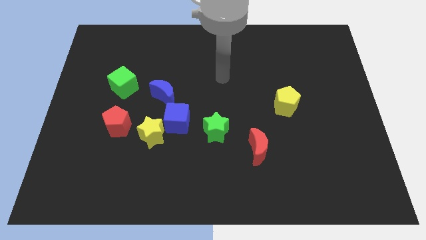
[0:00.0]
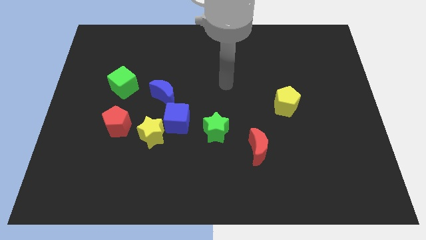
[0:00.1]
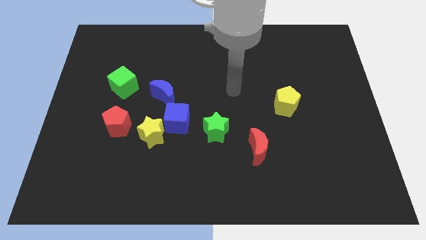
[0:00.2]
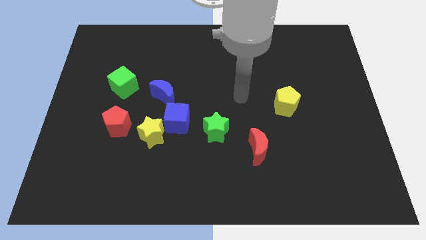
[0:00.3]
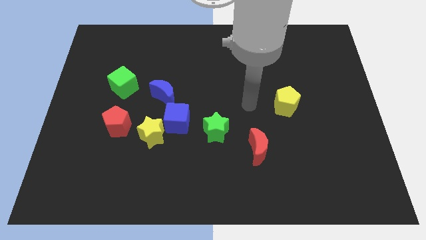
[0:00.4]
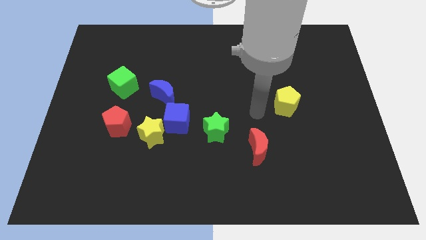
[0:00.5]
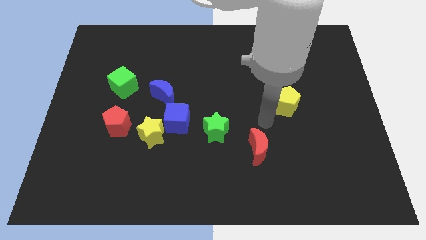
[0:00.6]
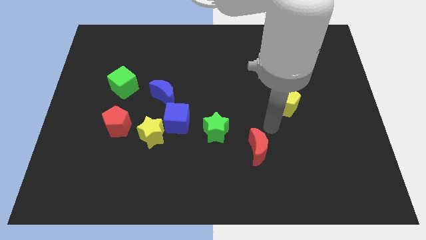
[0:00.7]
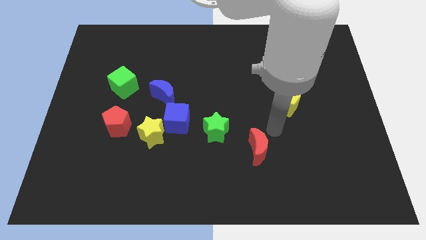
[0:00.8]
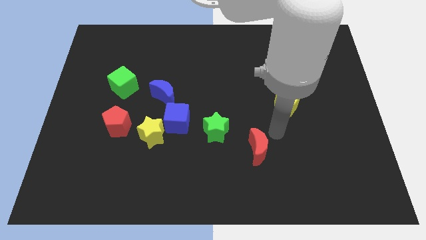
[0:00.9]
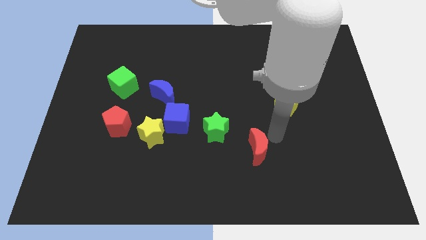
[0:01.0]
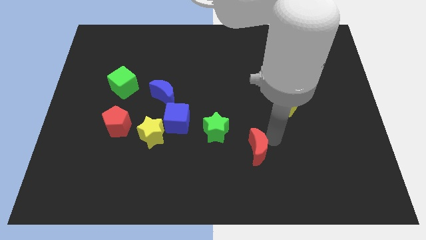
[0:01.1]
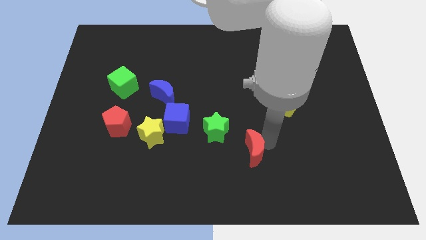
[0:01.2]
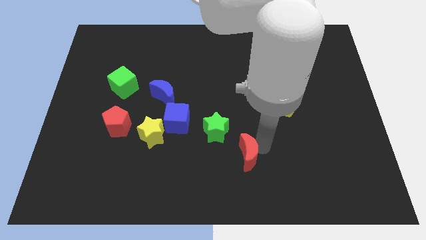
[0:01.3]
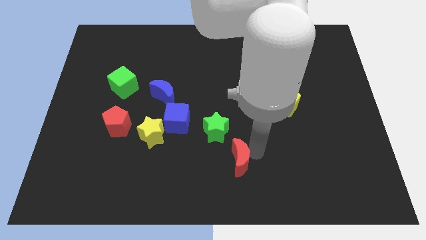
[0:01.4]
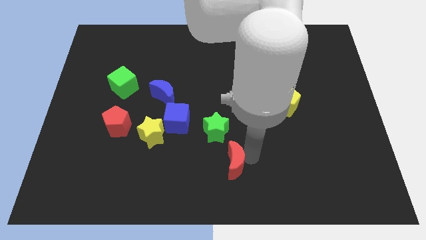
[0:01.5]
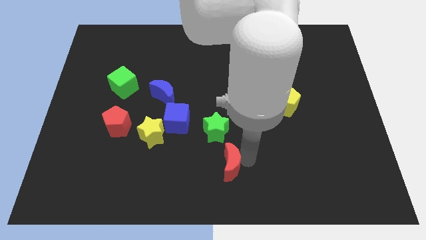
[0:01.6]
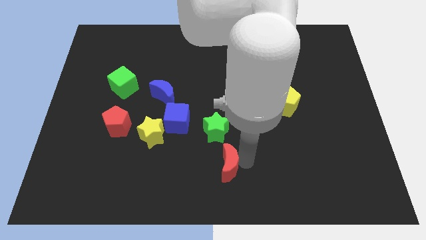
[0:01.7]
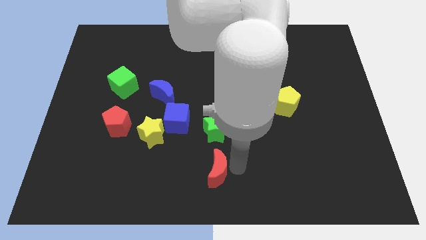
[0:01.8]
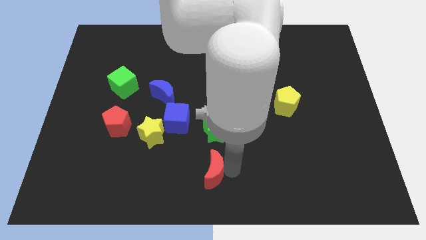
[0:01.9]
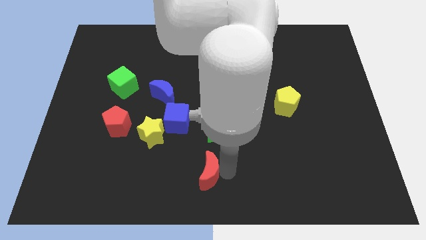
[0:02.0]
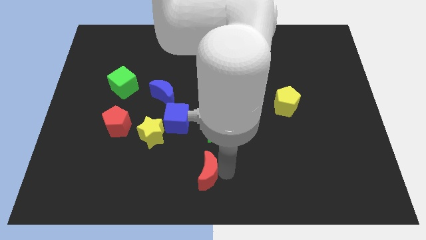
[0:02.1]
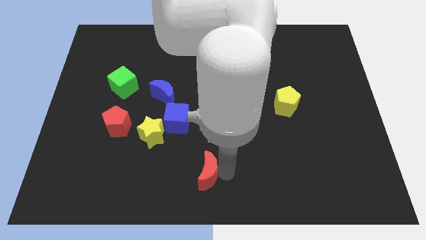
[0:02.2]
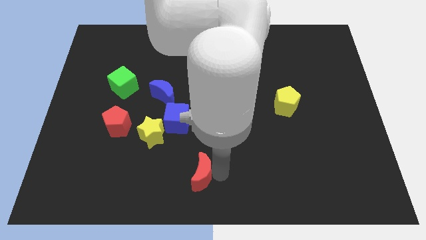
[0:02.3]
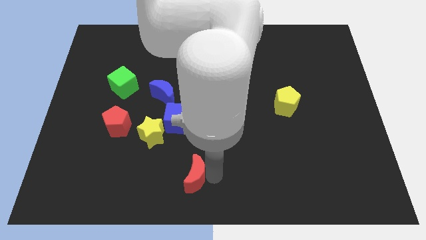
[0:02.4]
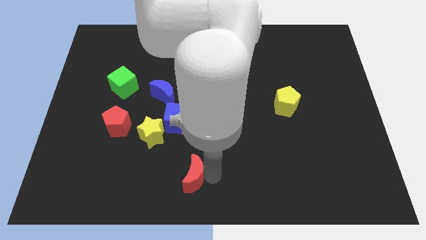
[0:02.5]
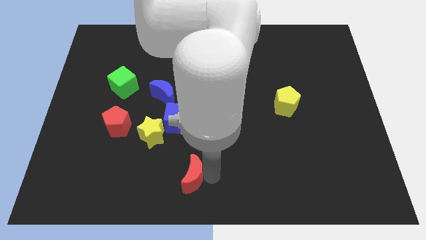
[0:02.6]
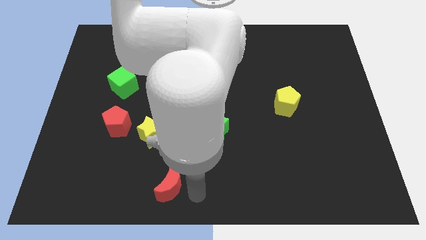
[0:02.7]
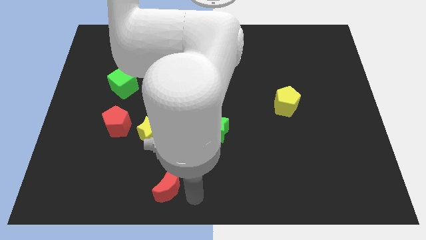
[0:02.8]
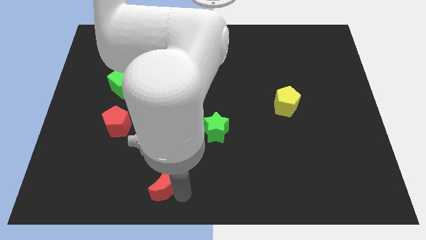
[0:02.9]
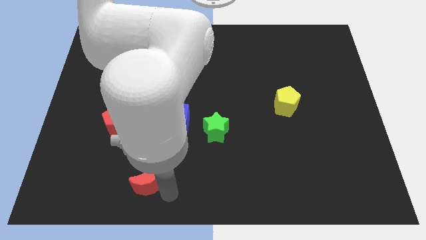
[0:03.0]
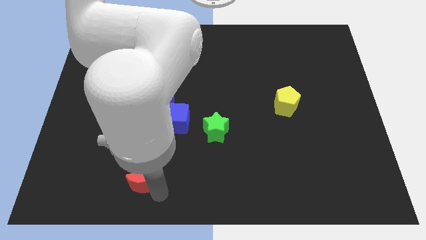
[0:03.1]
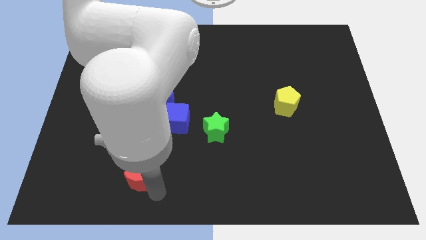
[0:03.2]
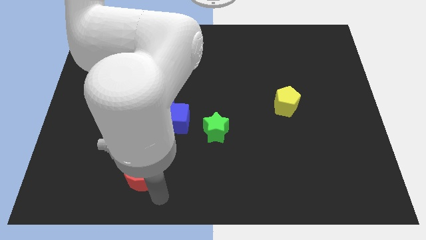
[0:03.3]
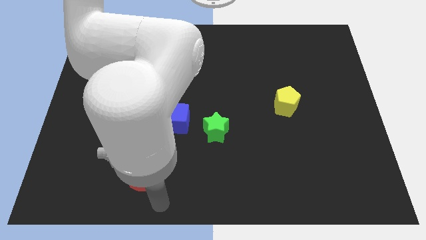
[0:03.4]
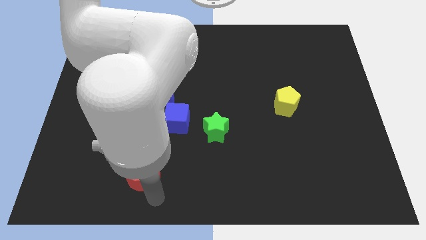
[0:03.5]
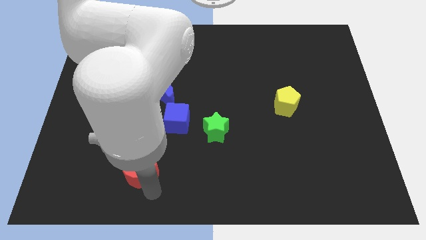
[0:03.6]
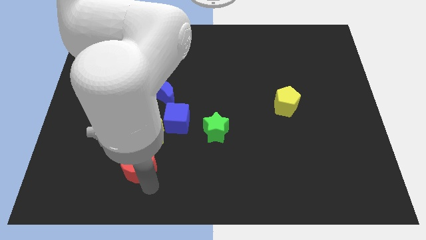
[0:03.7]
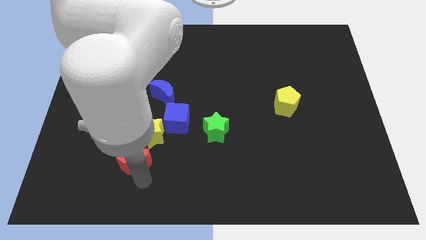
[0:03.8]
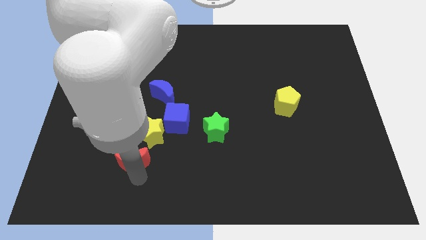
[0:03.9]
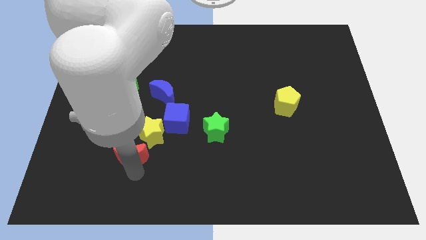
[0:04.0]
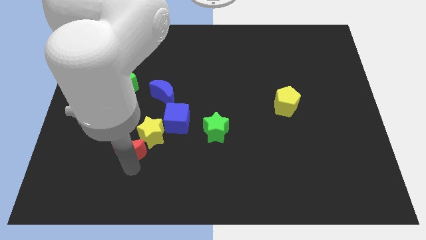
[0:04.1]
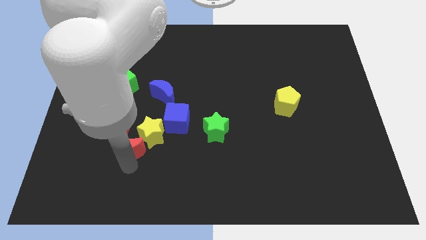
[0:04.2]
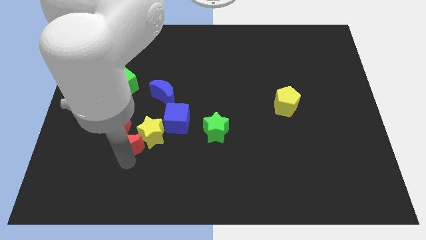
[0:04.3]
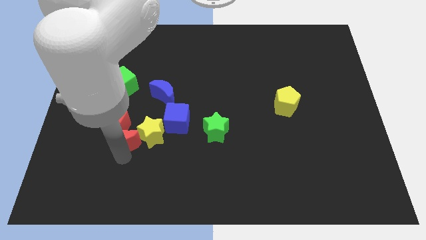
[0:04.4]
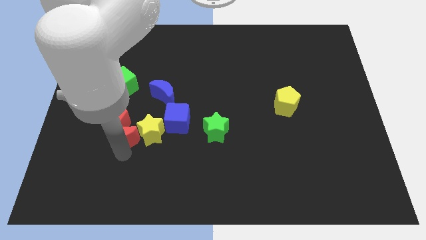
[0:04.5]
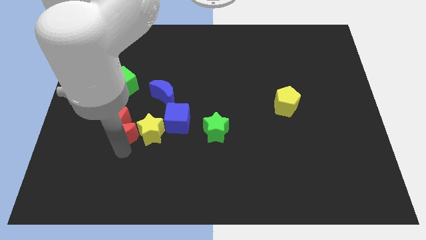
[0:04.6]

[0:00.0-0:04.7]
move the red moon to the red pentagon

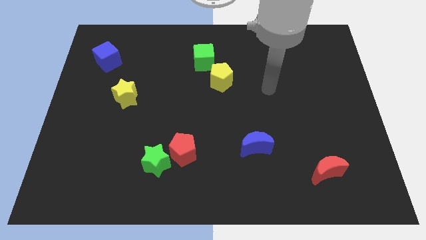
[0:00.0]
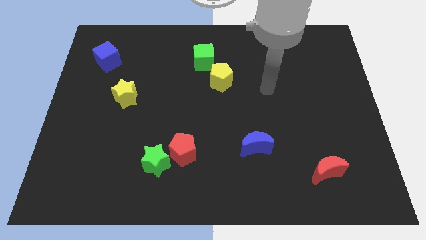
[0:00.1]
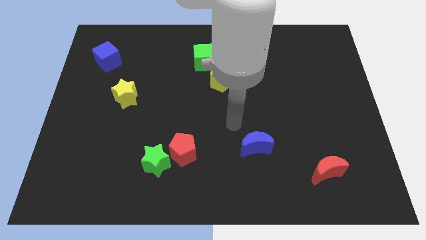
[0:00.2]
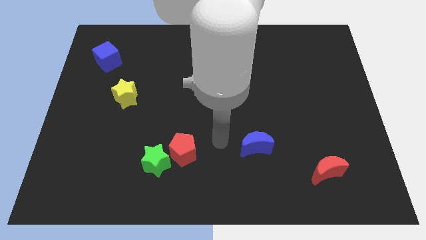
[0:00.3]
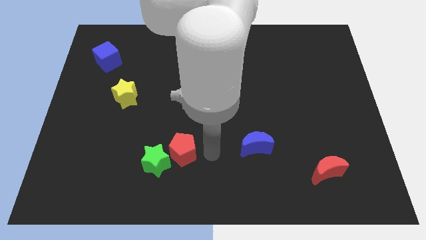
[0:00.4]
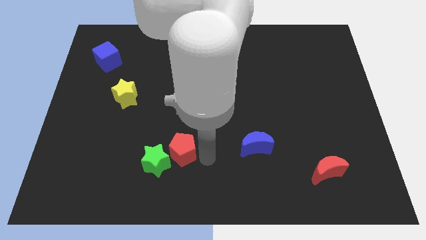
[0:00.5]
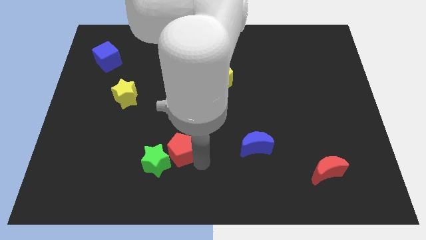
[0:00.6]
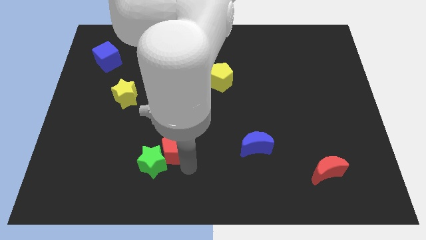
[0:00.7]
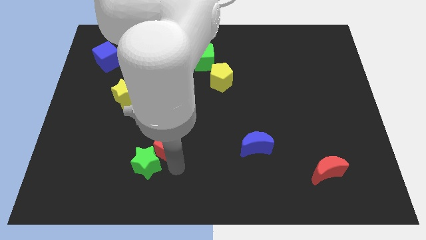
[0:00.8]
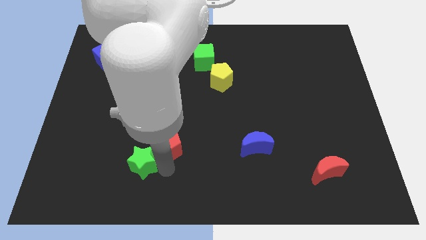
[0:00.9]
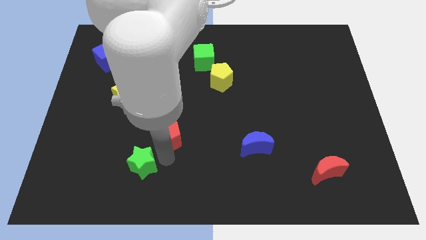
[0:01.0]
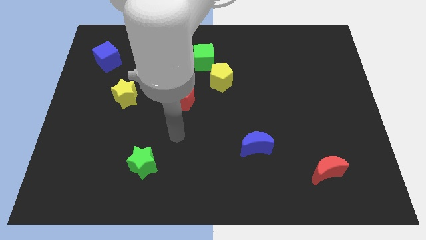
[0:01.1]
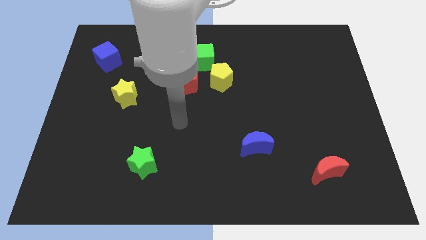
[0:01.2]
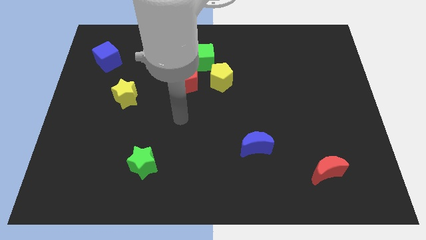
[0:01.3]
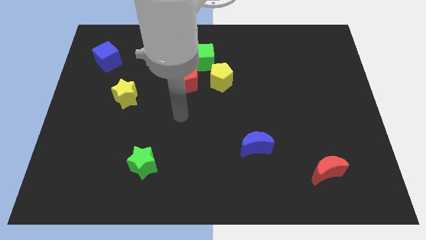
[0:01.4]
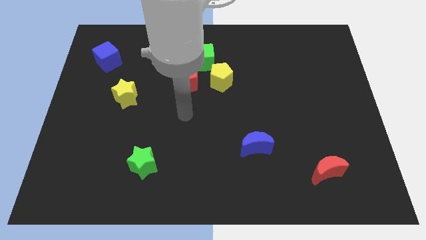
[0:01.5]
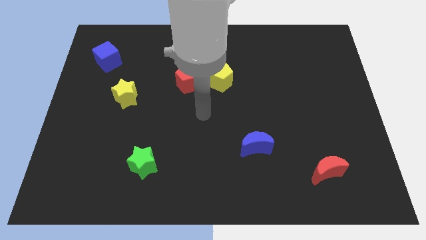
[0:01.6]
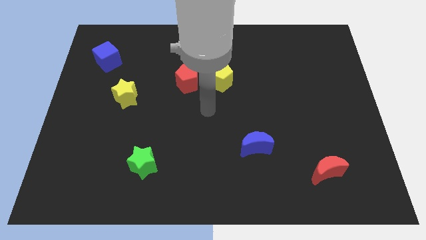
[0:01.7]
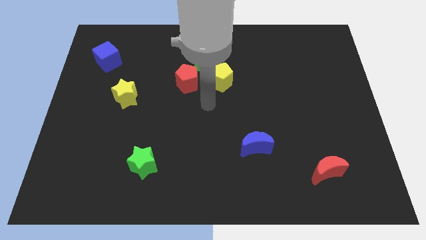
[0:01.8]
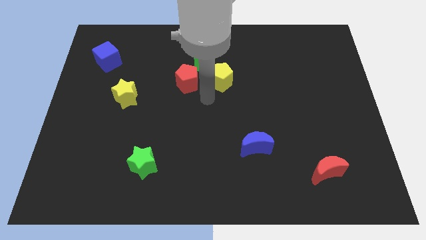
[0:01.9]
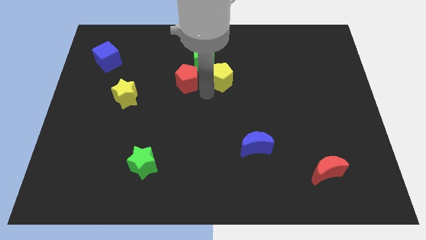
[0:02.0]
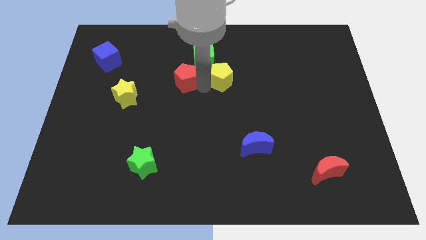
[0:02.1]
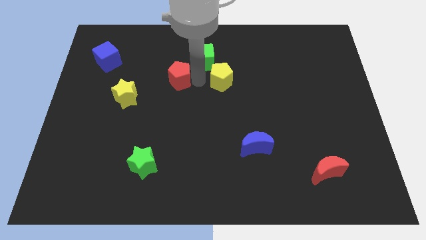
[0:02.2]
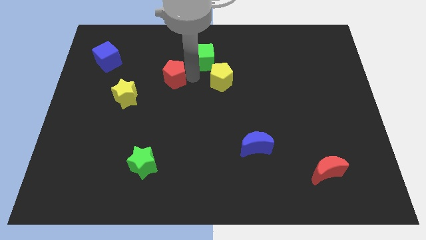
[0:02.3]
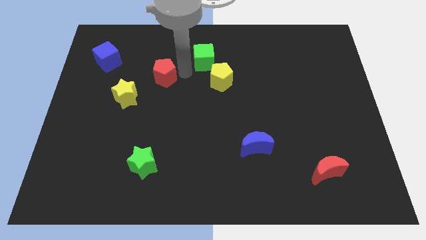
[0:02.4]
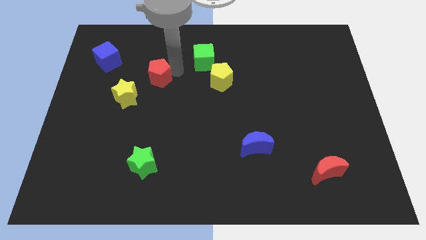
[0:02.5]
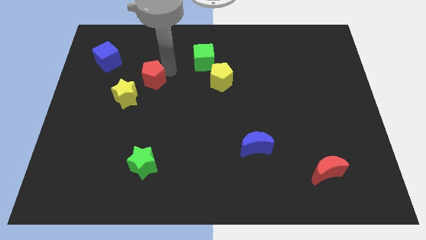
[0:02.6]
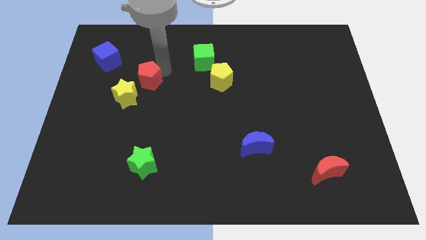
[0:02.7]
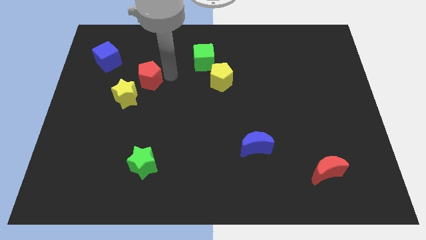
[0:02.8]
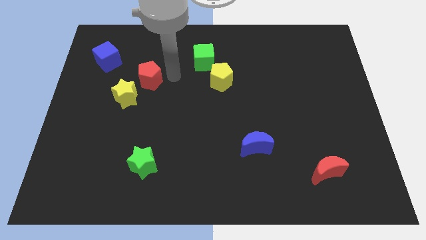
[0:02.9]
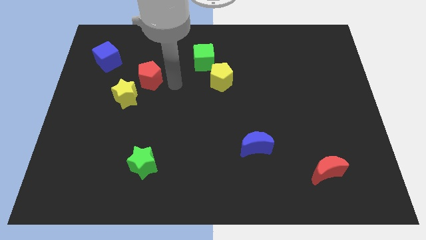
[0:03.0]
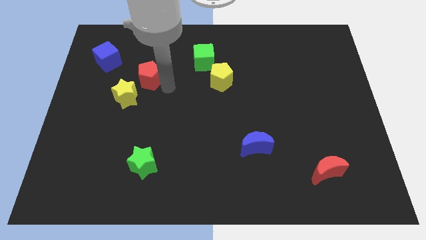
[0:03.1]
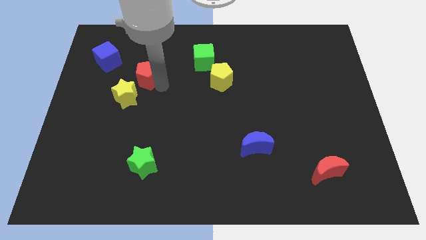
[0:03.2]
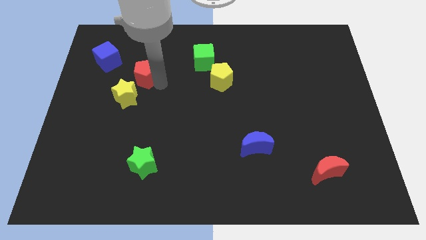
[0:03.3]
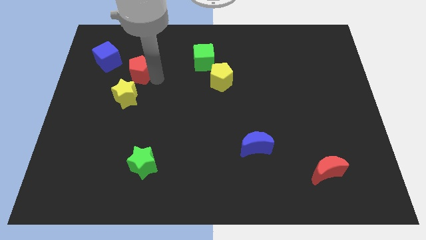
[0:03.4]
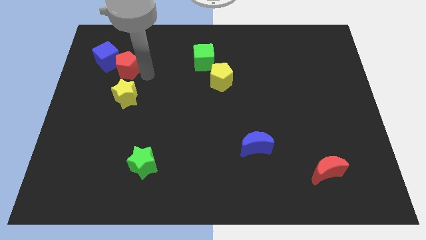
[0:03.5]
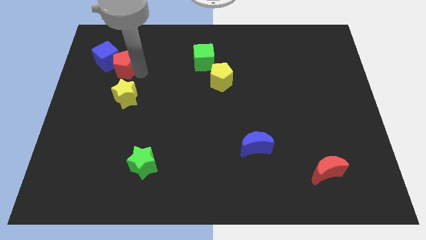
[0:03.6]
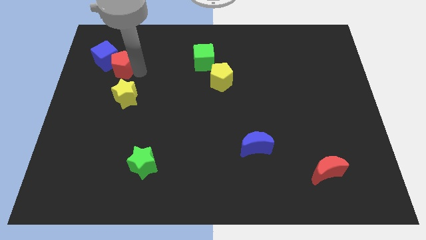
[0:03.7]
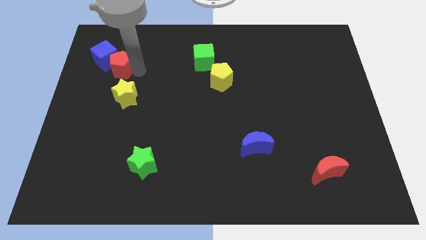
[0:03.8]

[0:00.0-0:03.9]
move the red pentagon next to the blue cube
